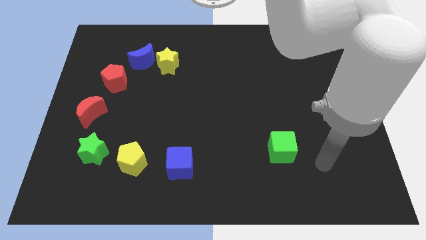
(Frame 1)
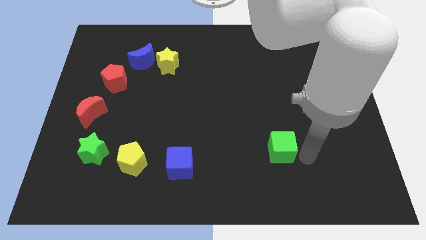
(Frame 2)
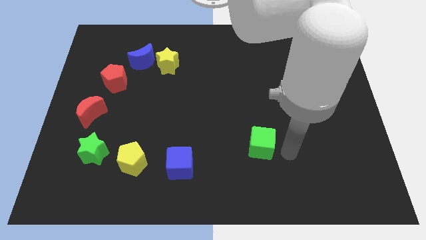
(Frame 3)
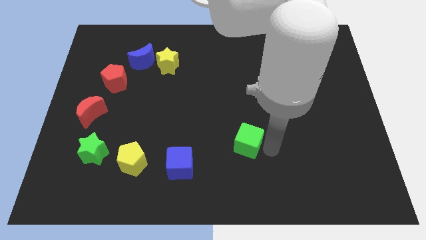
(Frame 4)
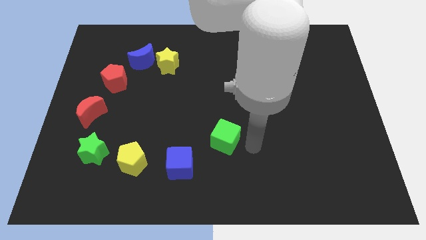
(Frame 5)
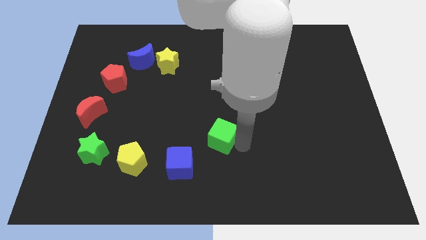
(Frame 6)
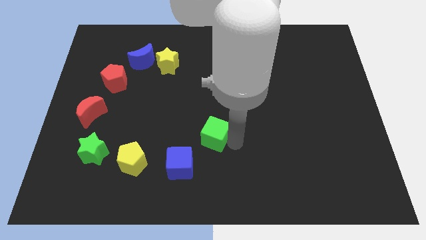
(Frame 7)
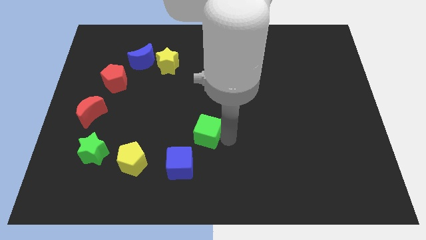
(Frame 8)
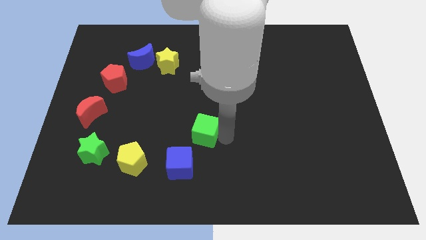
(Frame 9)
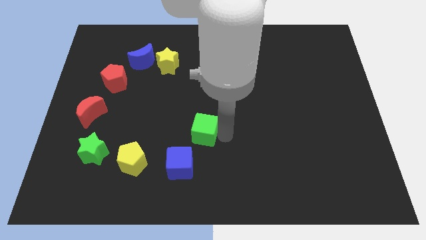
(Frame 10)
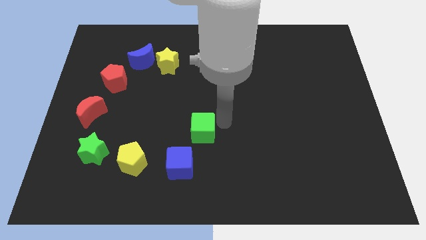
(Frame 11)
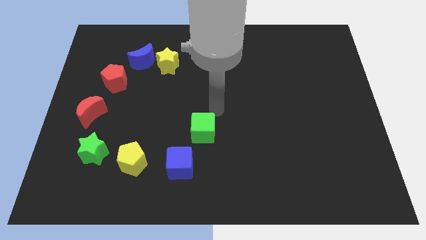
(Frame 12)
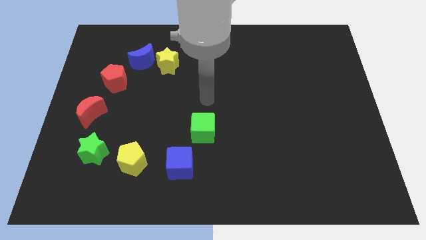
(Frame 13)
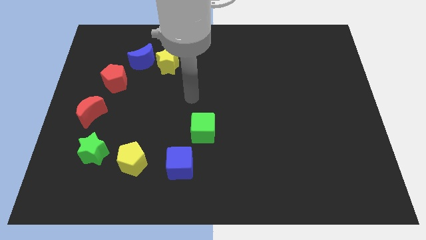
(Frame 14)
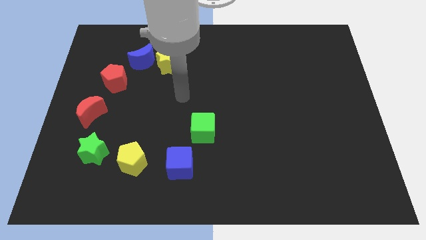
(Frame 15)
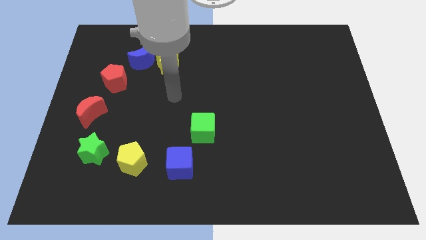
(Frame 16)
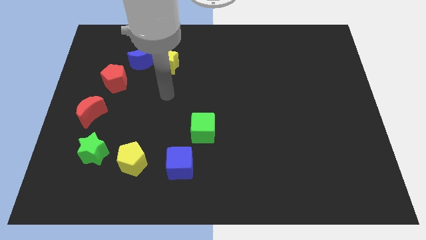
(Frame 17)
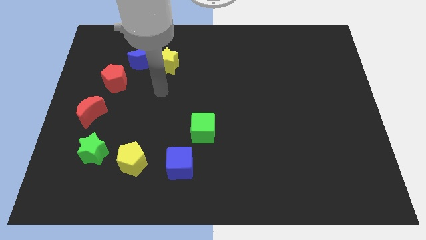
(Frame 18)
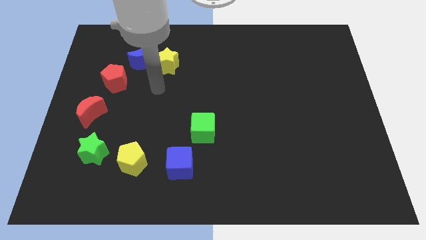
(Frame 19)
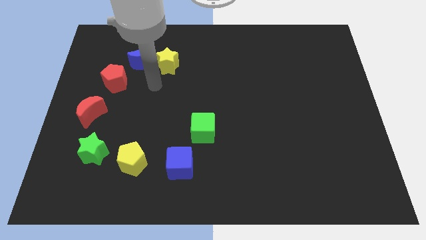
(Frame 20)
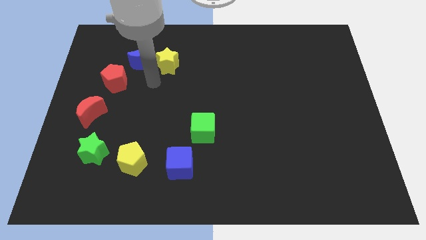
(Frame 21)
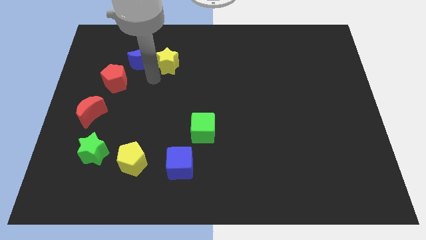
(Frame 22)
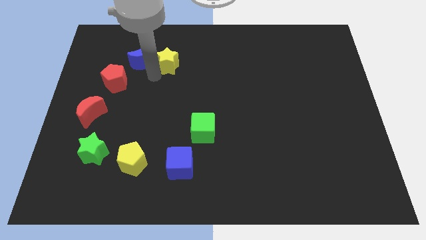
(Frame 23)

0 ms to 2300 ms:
push the green cube towards the left side of the board

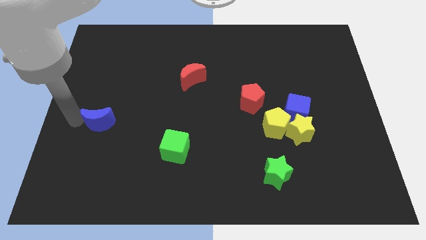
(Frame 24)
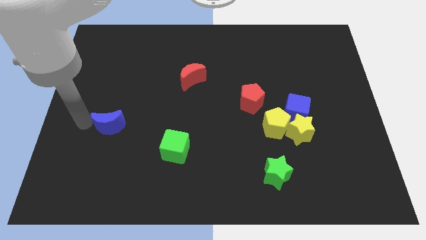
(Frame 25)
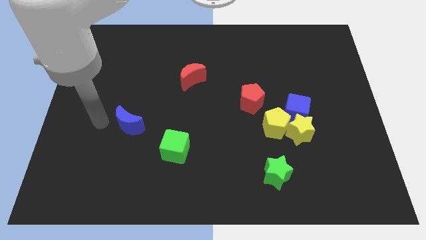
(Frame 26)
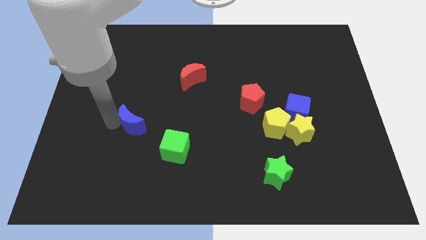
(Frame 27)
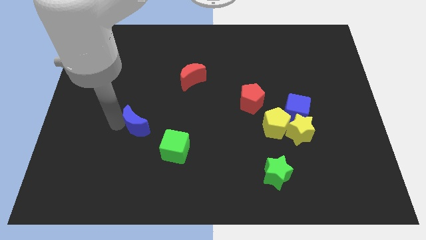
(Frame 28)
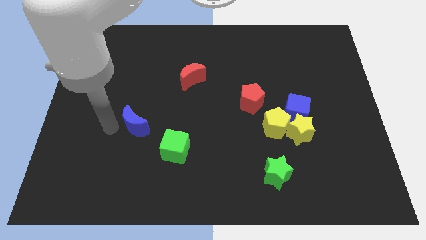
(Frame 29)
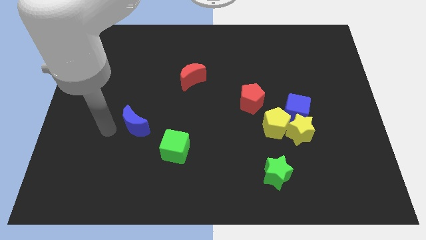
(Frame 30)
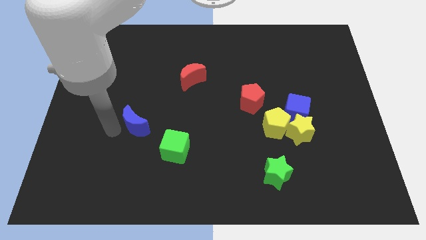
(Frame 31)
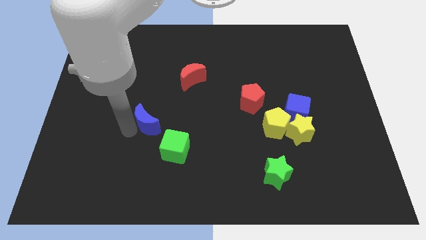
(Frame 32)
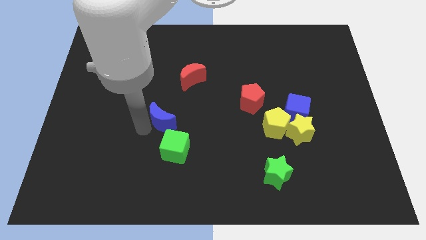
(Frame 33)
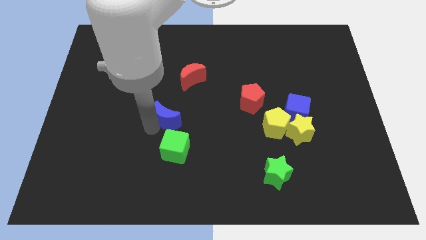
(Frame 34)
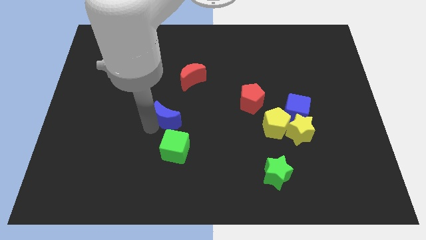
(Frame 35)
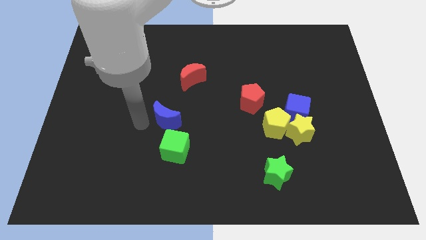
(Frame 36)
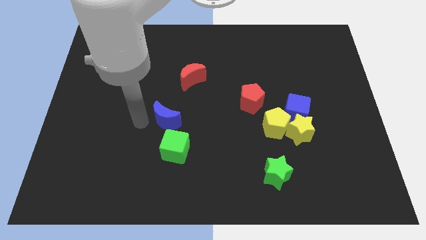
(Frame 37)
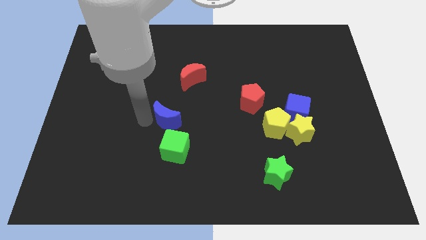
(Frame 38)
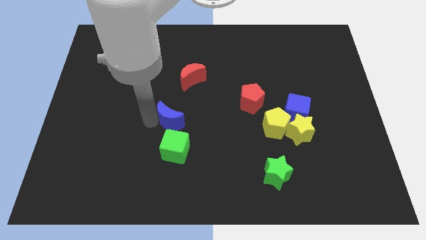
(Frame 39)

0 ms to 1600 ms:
place blue moon to the top of the green cube

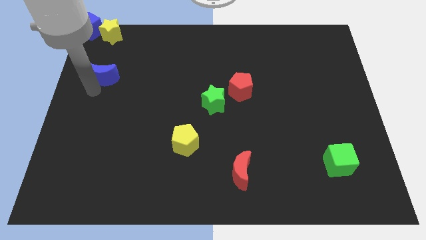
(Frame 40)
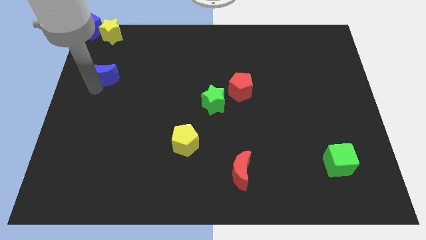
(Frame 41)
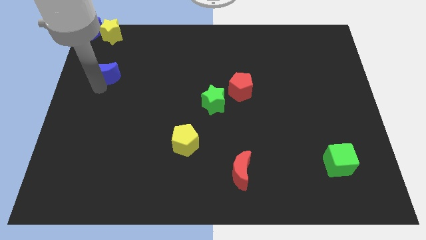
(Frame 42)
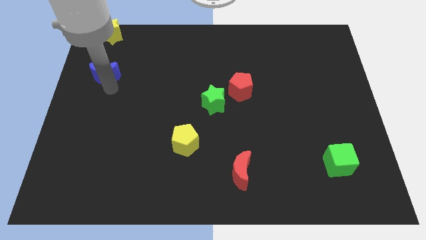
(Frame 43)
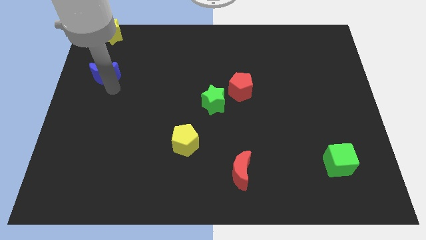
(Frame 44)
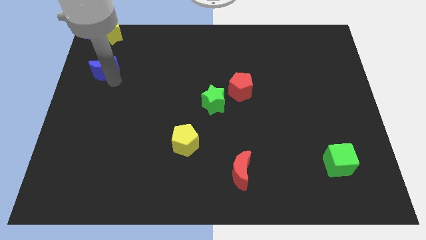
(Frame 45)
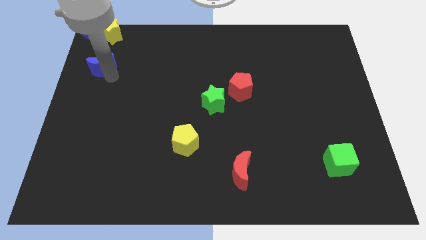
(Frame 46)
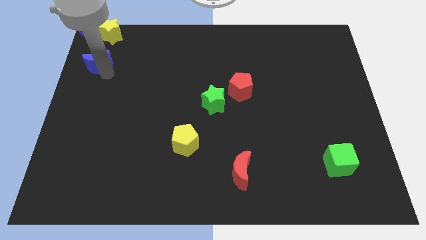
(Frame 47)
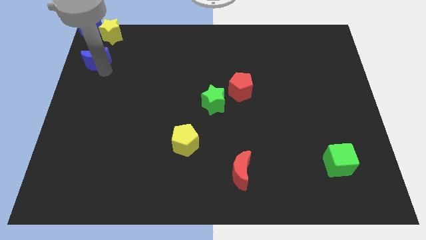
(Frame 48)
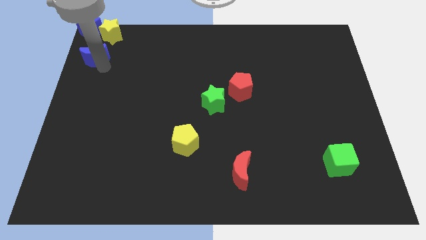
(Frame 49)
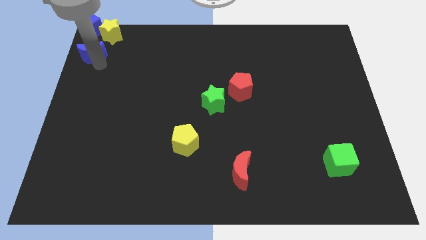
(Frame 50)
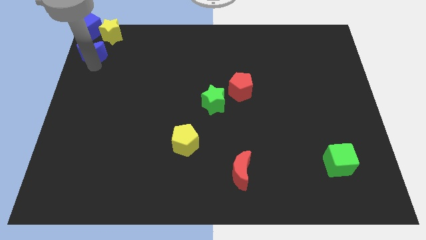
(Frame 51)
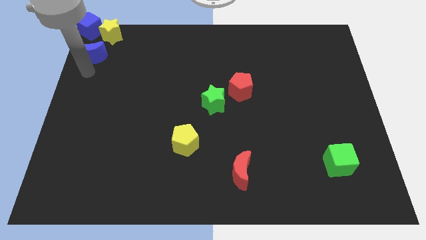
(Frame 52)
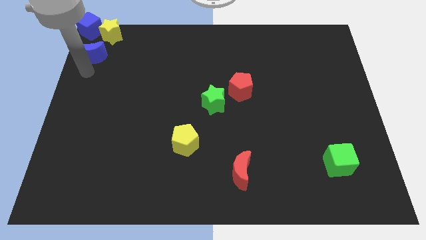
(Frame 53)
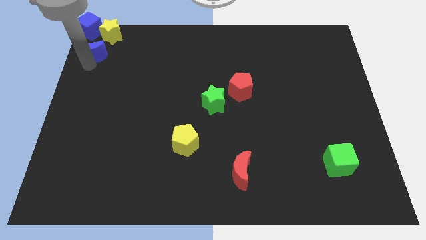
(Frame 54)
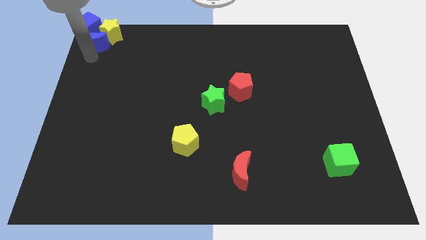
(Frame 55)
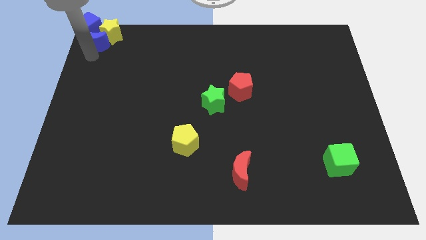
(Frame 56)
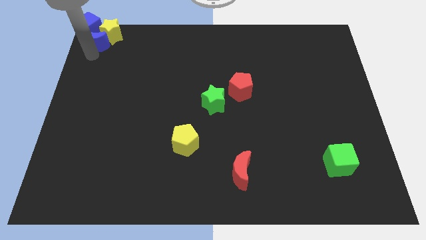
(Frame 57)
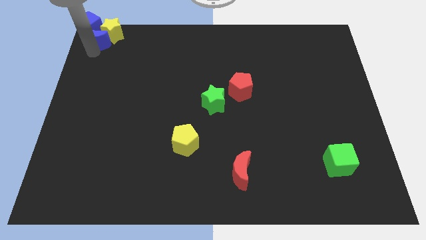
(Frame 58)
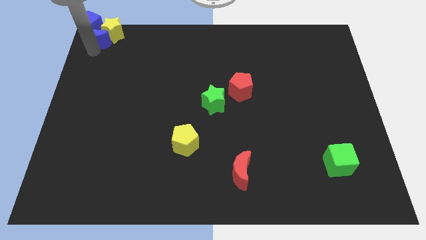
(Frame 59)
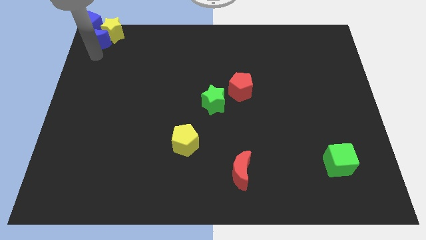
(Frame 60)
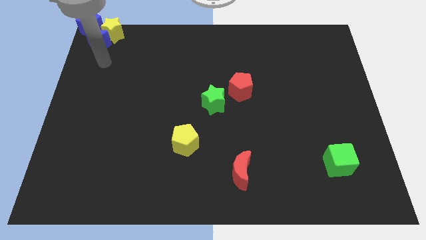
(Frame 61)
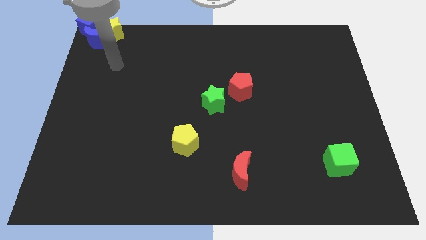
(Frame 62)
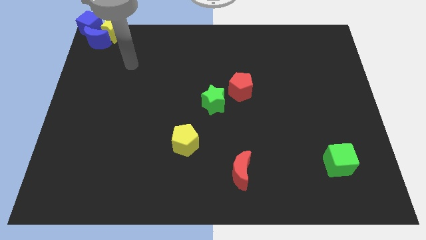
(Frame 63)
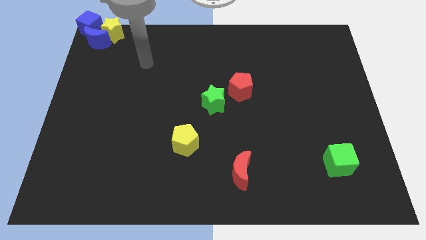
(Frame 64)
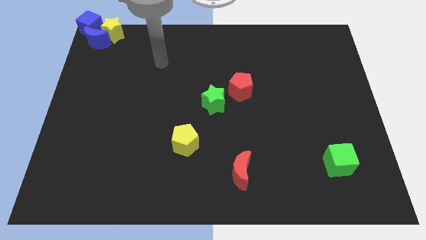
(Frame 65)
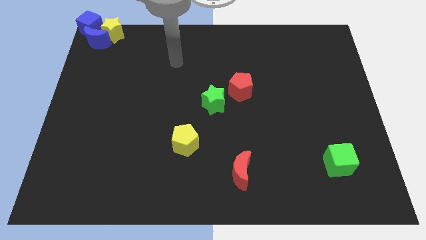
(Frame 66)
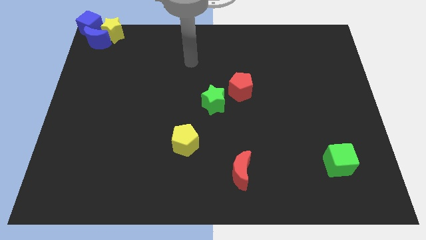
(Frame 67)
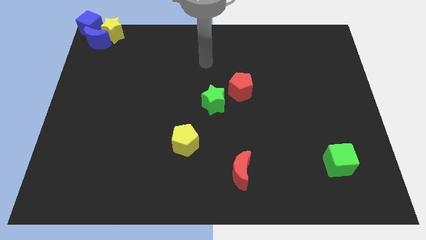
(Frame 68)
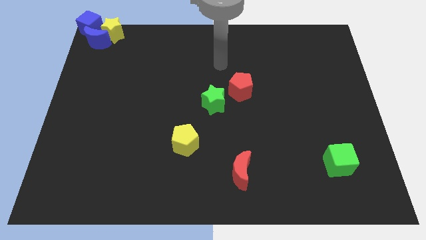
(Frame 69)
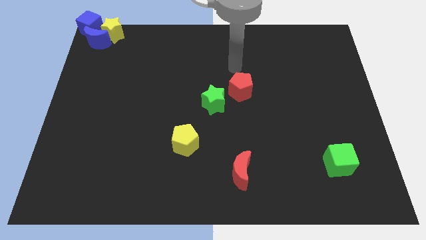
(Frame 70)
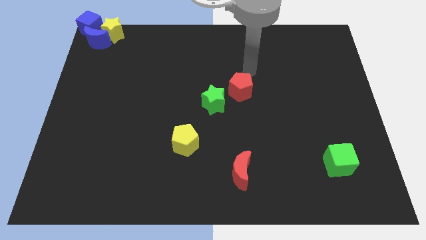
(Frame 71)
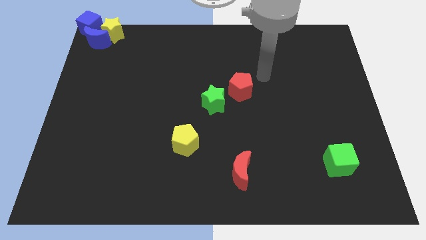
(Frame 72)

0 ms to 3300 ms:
push the blue crescent to the top left of the board

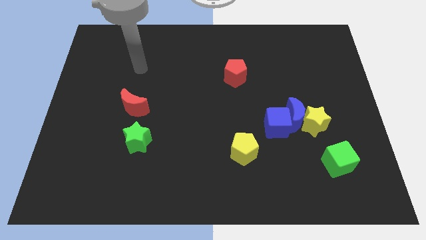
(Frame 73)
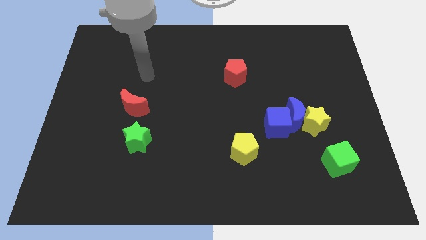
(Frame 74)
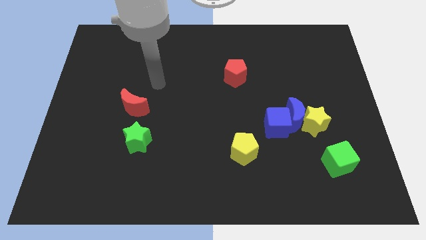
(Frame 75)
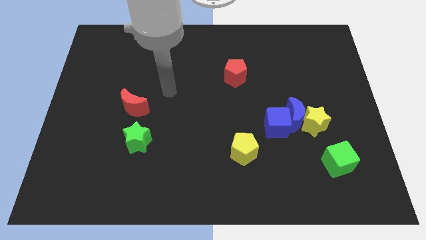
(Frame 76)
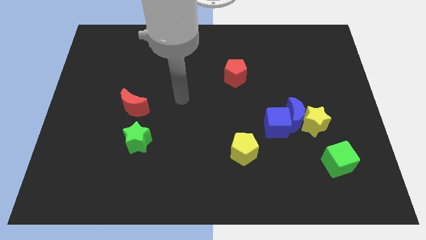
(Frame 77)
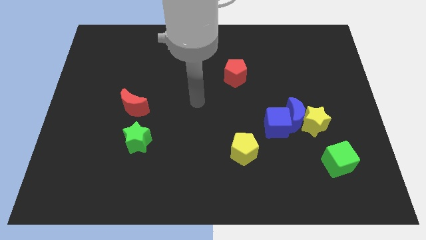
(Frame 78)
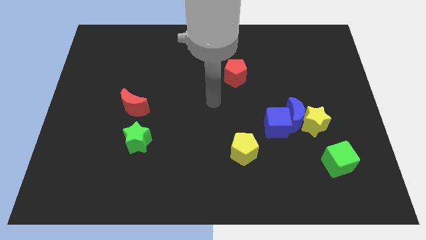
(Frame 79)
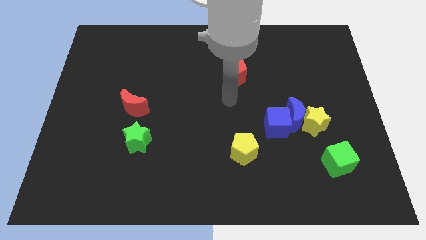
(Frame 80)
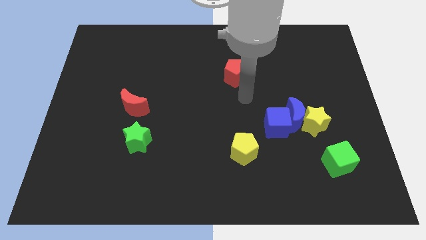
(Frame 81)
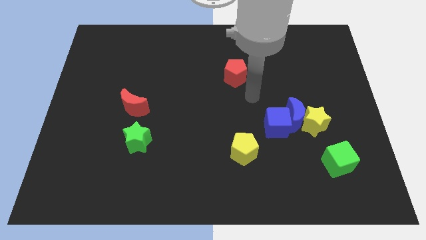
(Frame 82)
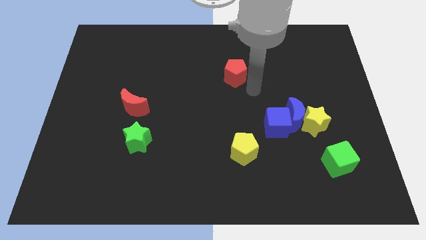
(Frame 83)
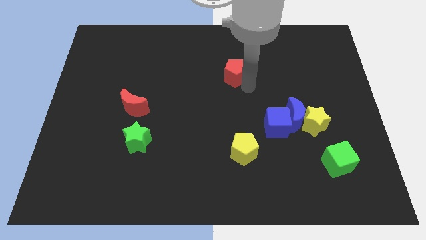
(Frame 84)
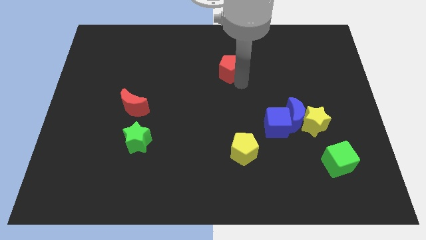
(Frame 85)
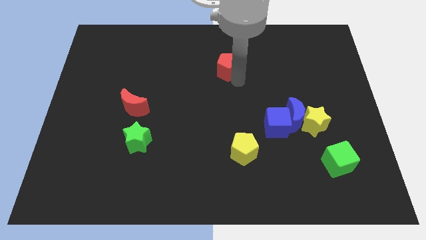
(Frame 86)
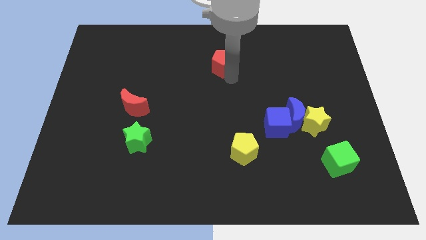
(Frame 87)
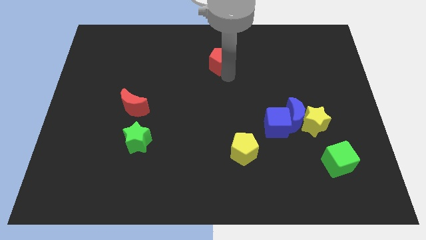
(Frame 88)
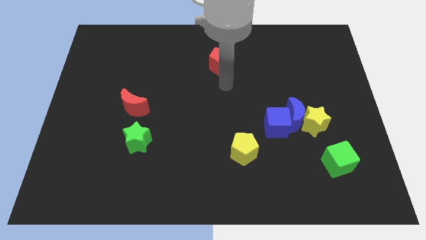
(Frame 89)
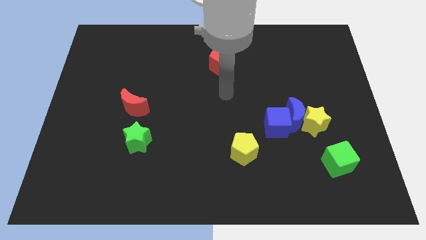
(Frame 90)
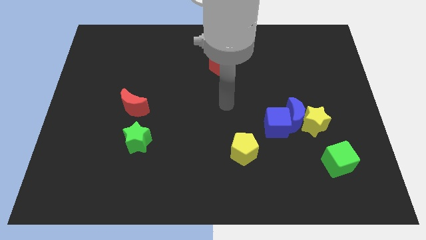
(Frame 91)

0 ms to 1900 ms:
slightly push the red pentagon to the top center side of the board
